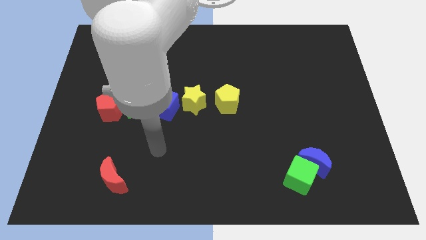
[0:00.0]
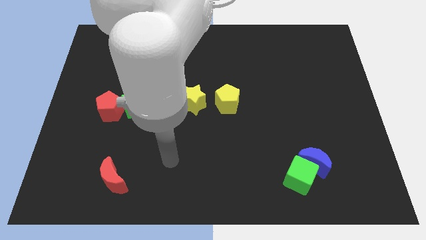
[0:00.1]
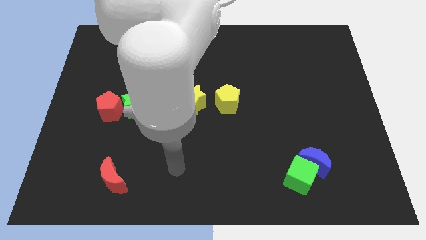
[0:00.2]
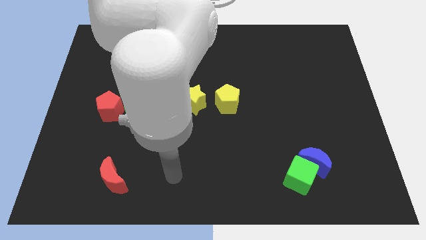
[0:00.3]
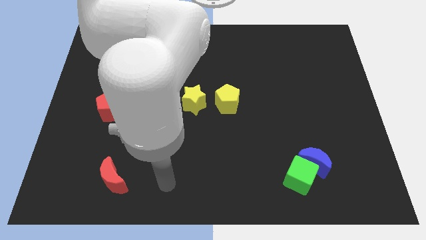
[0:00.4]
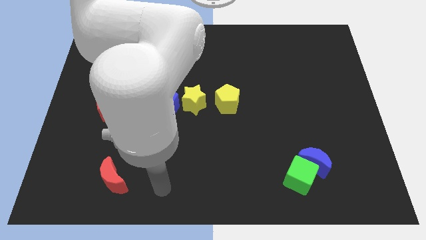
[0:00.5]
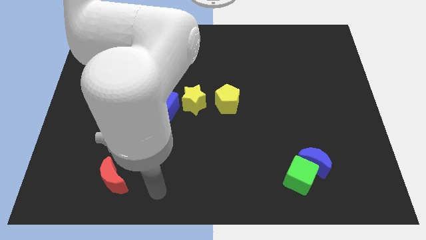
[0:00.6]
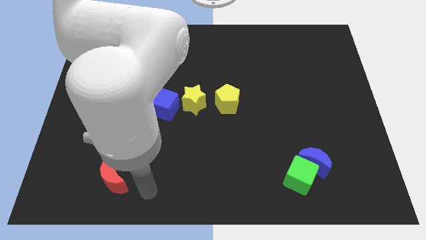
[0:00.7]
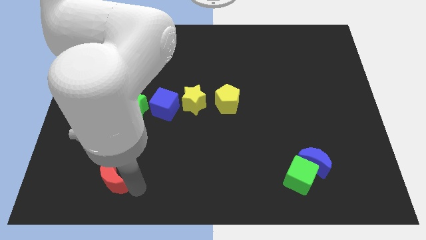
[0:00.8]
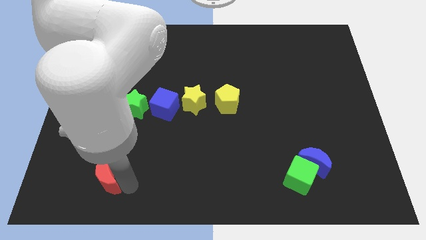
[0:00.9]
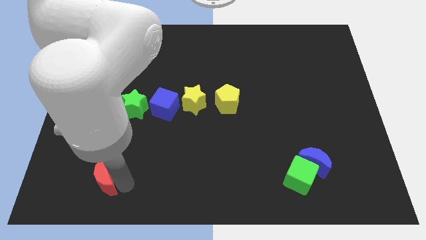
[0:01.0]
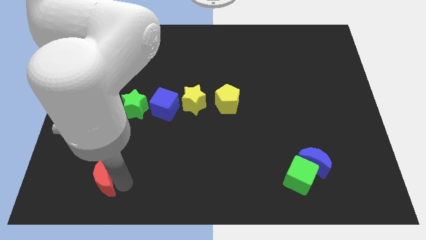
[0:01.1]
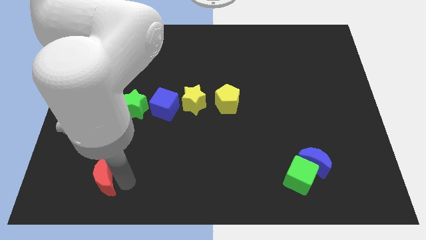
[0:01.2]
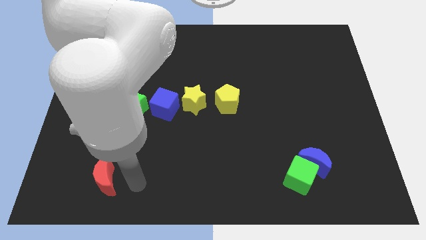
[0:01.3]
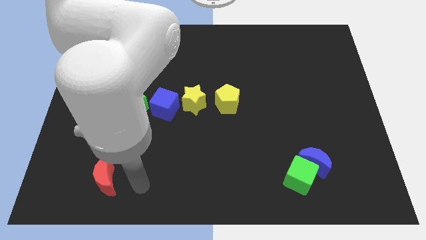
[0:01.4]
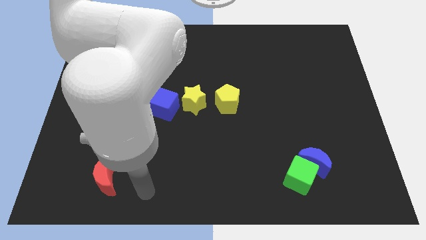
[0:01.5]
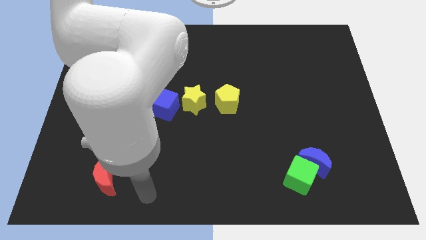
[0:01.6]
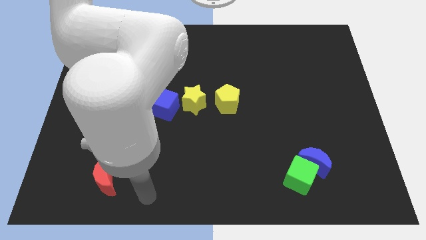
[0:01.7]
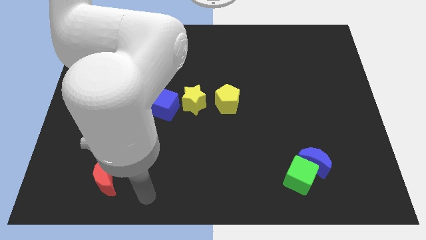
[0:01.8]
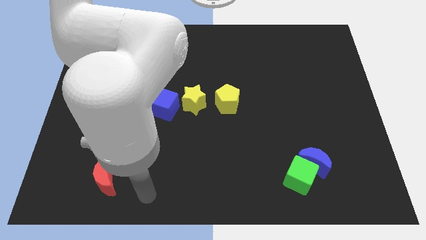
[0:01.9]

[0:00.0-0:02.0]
slightly move the red crescent to the left of the board

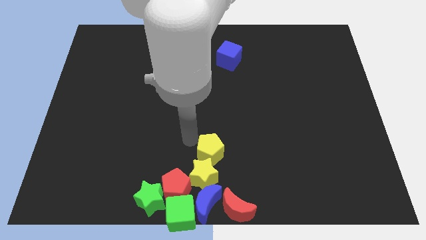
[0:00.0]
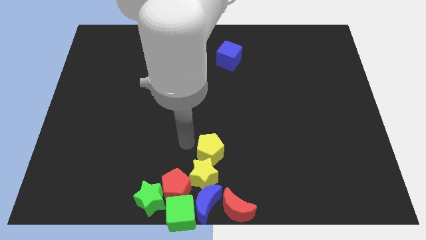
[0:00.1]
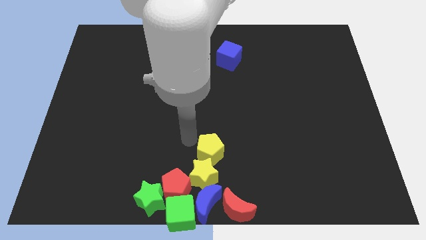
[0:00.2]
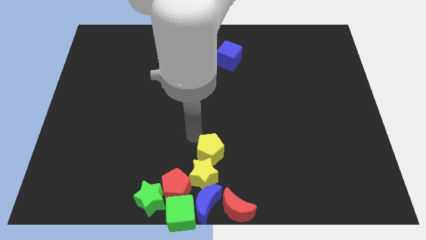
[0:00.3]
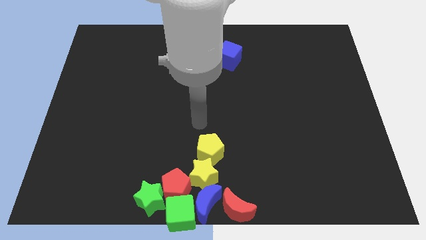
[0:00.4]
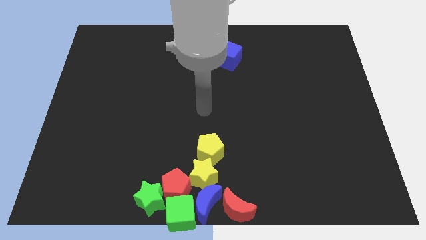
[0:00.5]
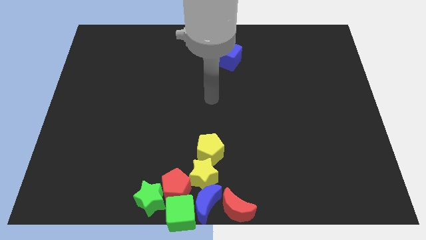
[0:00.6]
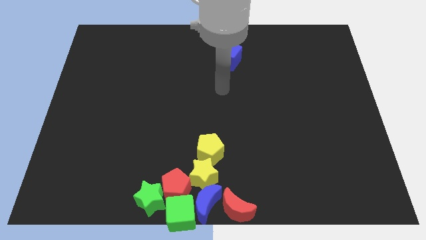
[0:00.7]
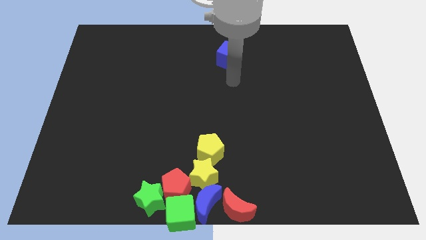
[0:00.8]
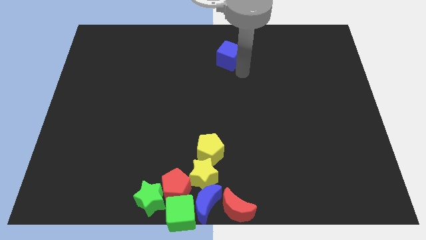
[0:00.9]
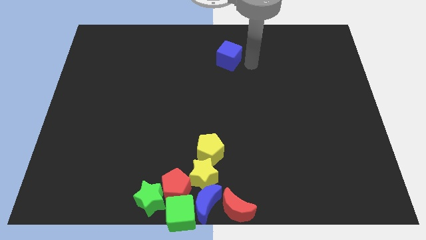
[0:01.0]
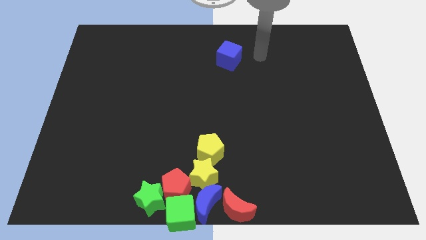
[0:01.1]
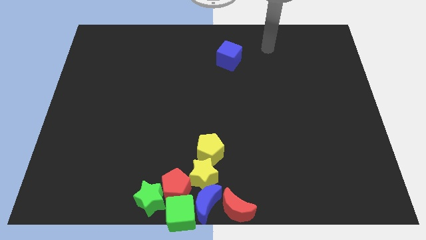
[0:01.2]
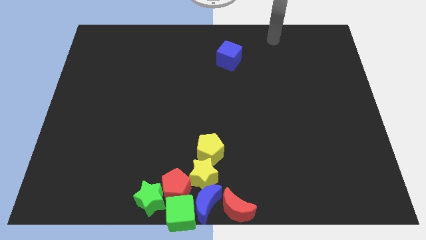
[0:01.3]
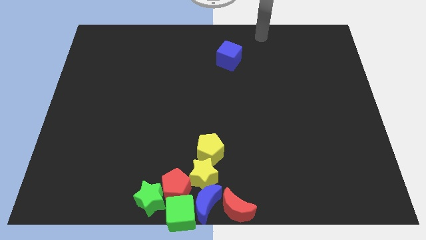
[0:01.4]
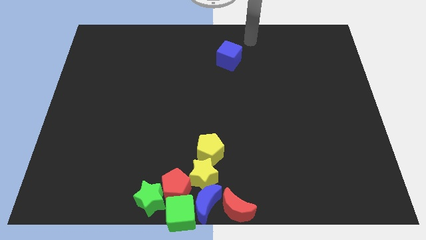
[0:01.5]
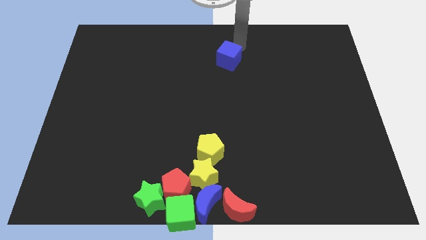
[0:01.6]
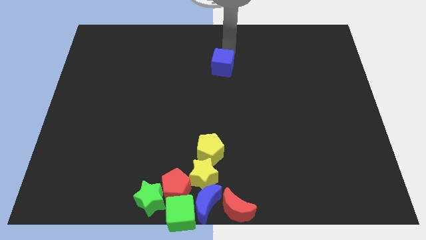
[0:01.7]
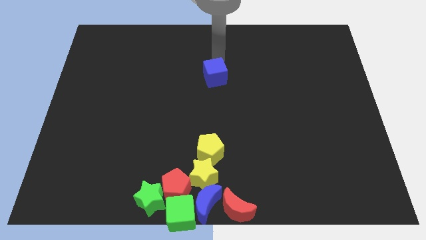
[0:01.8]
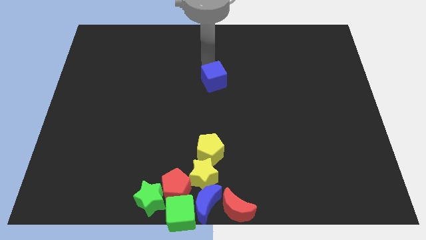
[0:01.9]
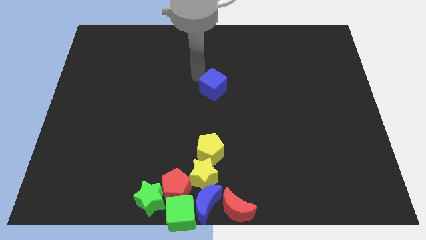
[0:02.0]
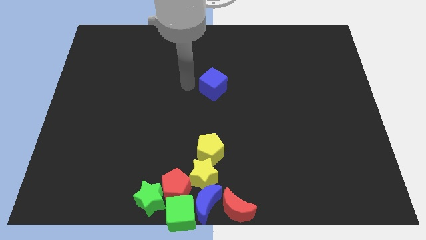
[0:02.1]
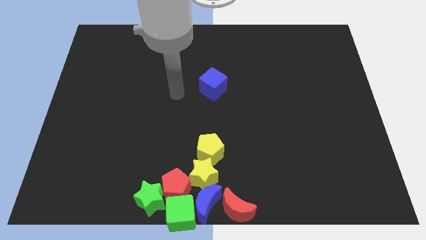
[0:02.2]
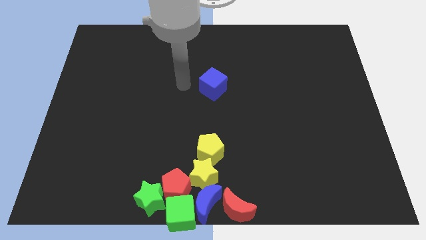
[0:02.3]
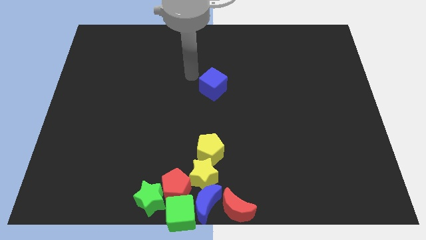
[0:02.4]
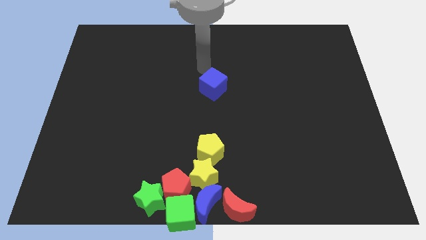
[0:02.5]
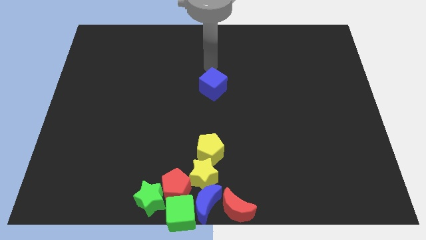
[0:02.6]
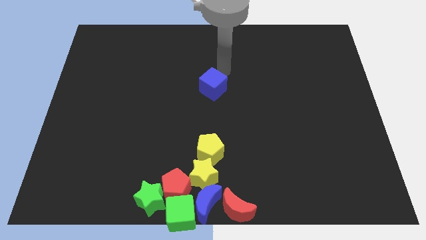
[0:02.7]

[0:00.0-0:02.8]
move the arm away from the yellow pentagon

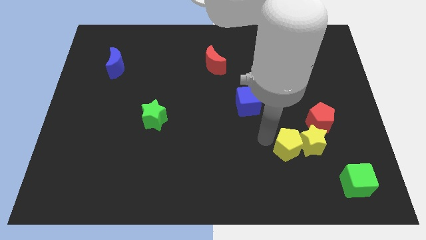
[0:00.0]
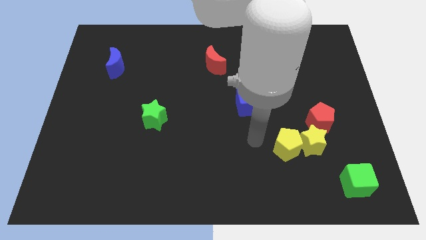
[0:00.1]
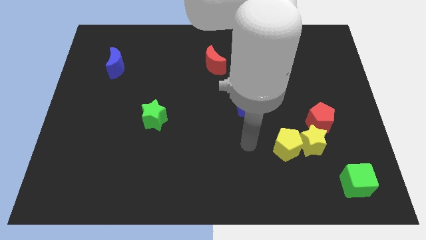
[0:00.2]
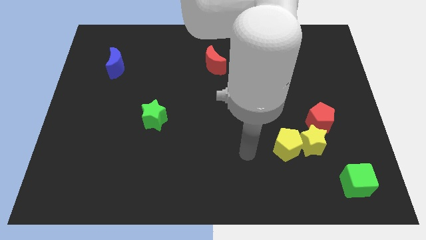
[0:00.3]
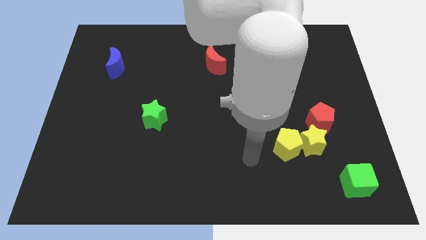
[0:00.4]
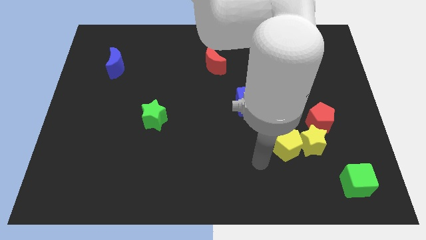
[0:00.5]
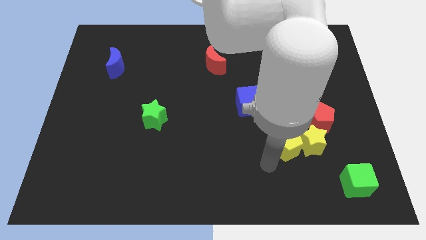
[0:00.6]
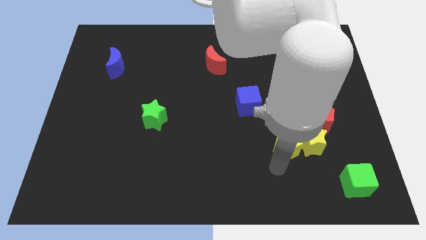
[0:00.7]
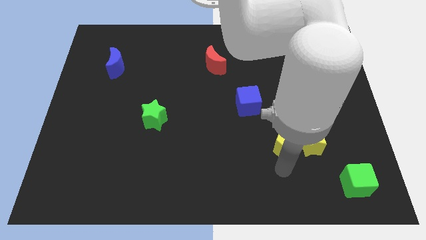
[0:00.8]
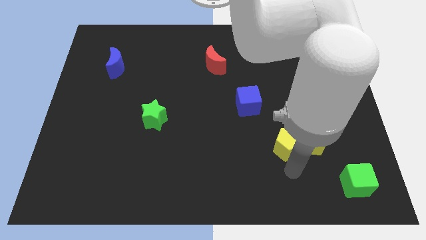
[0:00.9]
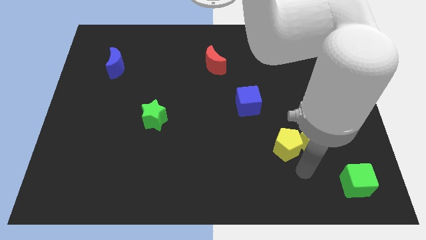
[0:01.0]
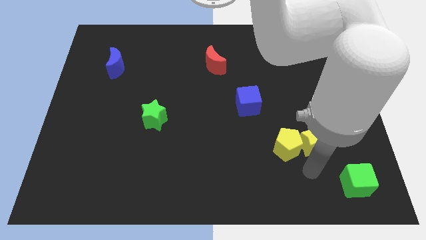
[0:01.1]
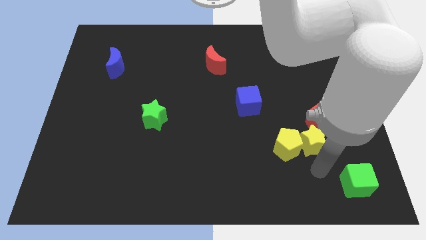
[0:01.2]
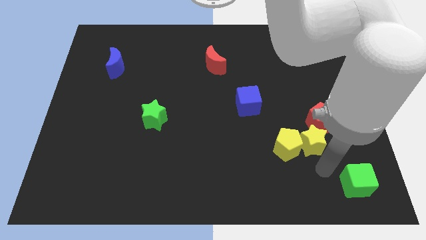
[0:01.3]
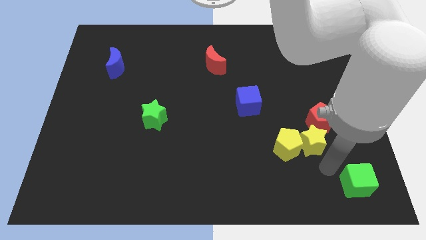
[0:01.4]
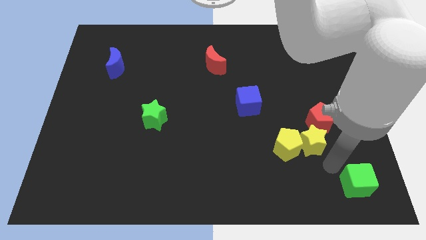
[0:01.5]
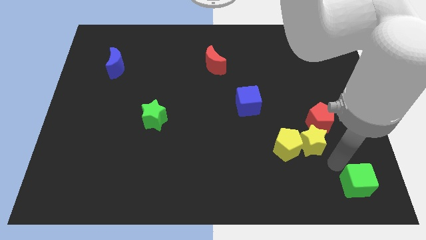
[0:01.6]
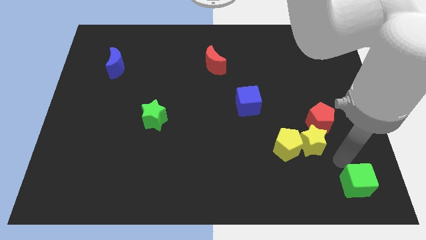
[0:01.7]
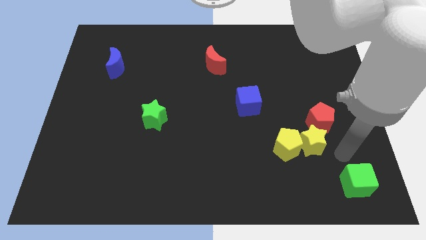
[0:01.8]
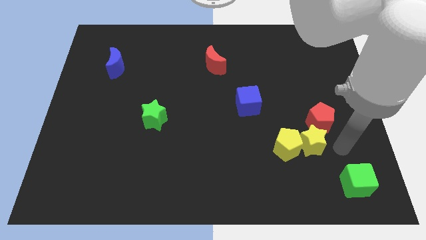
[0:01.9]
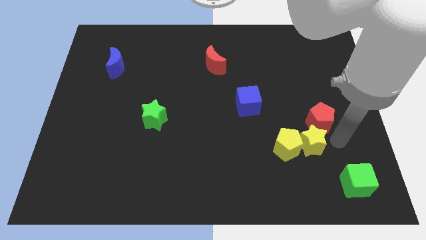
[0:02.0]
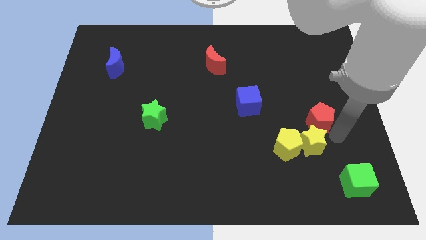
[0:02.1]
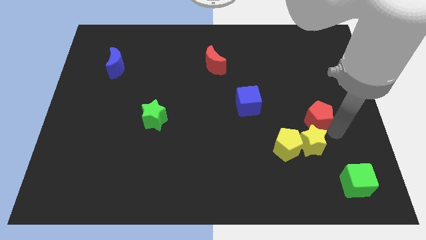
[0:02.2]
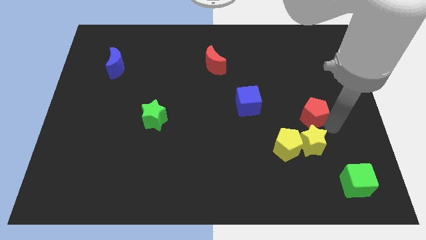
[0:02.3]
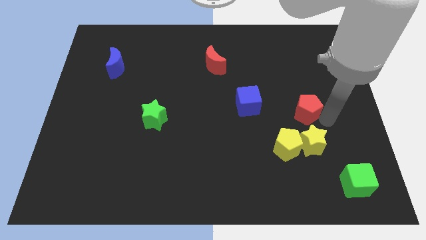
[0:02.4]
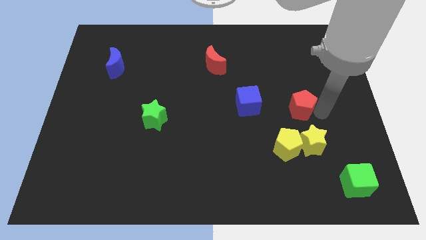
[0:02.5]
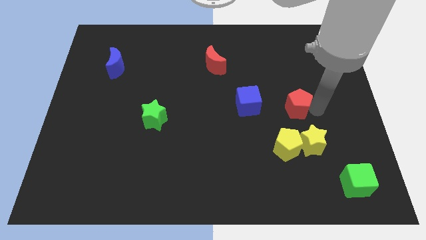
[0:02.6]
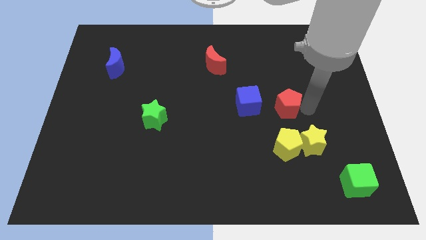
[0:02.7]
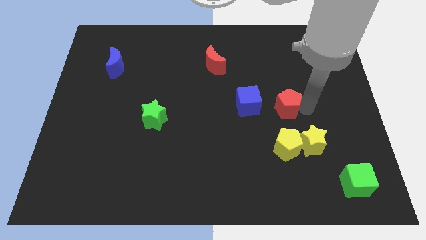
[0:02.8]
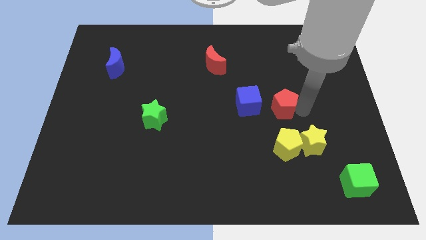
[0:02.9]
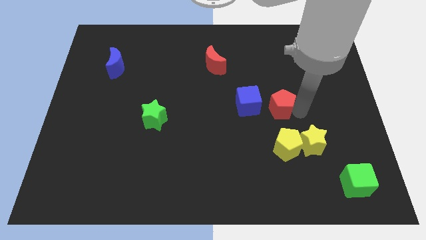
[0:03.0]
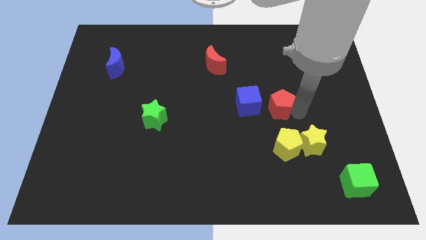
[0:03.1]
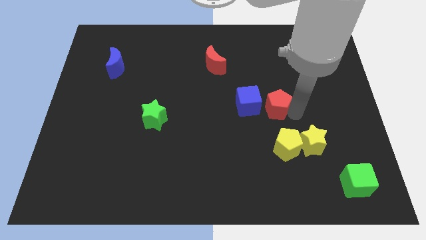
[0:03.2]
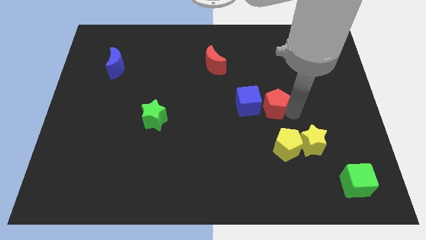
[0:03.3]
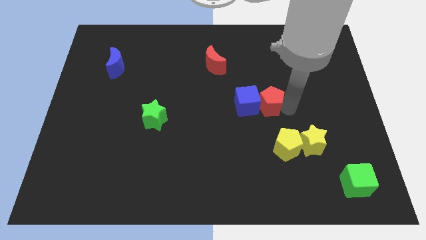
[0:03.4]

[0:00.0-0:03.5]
place the red pentagon to the right side of the blue cube

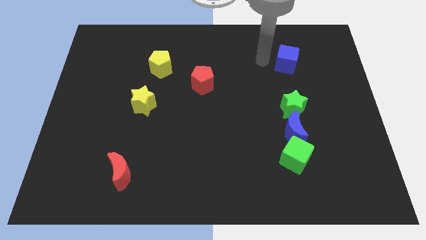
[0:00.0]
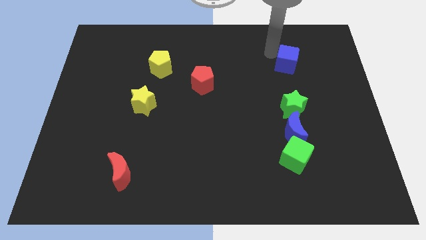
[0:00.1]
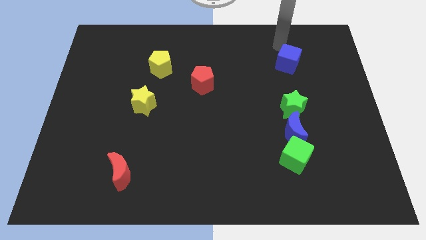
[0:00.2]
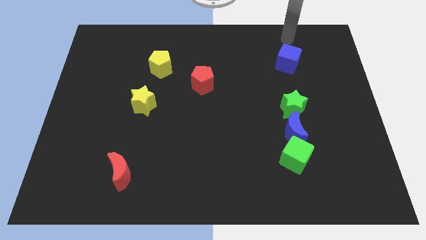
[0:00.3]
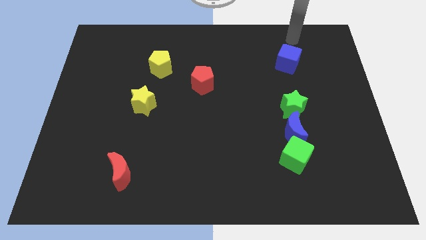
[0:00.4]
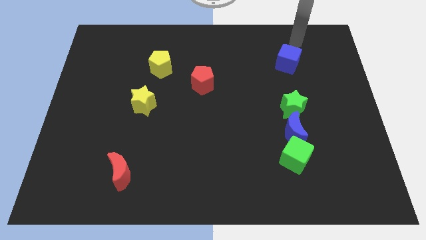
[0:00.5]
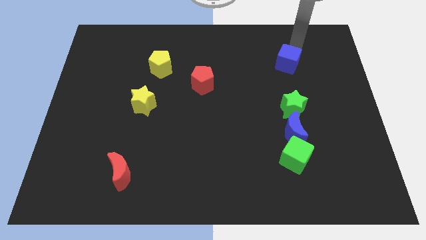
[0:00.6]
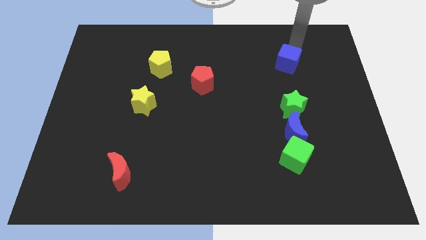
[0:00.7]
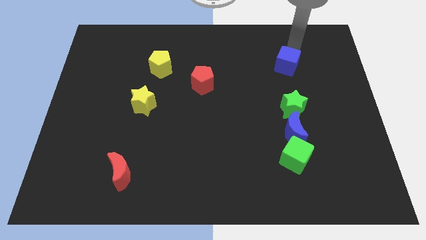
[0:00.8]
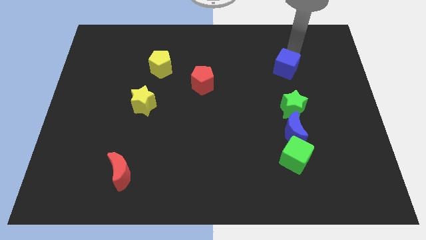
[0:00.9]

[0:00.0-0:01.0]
move blue cube slightly down
